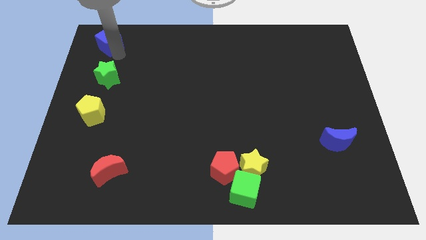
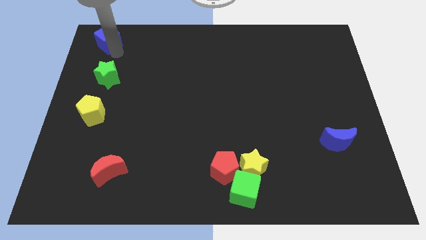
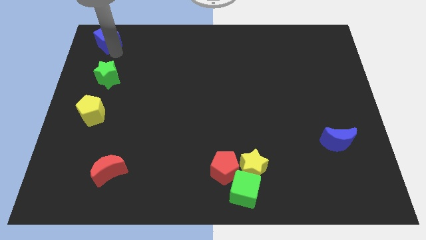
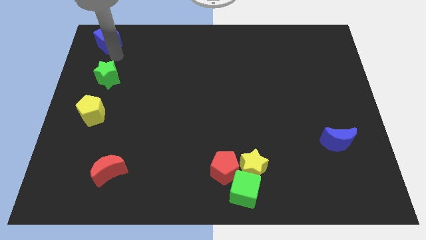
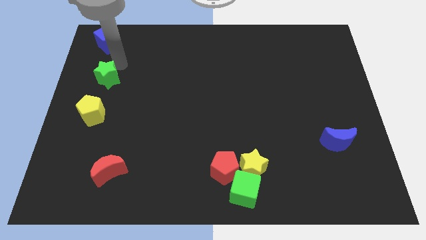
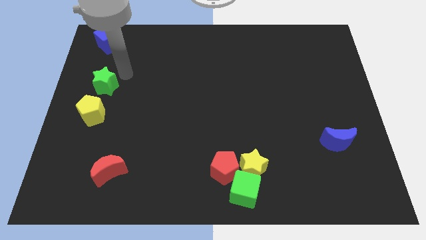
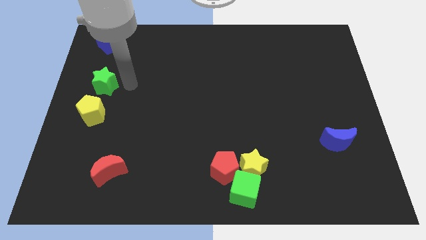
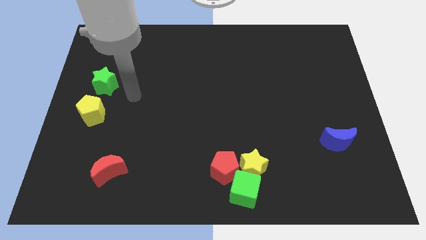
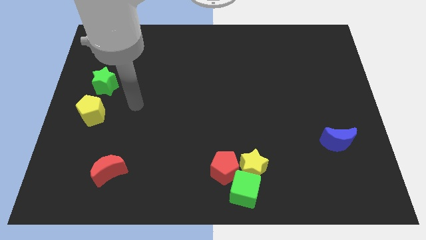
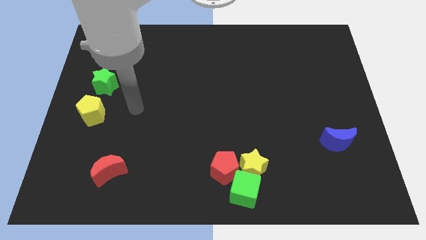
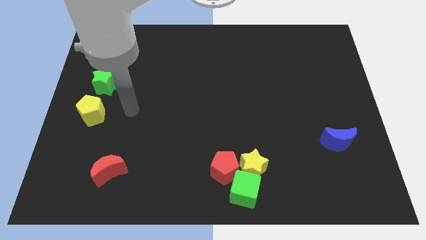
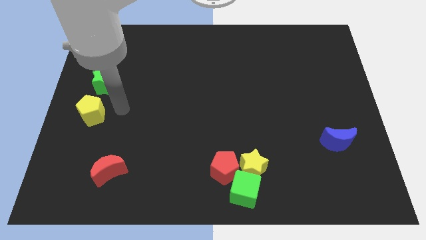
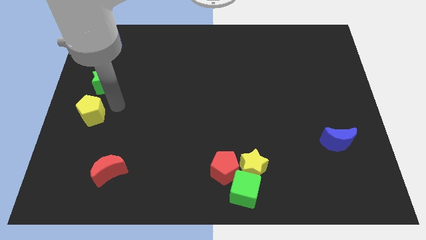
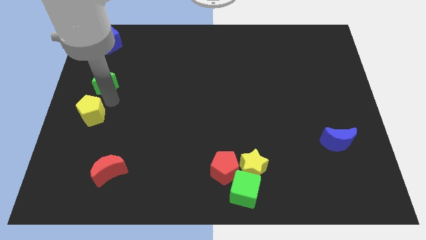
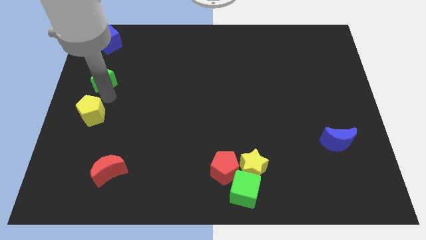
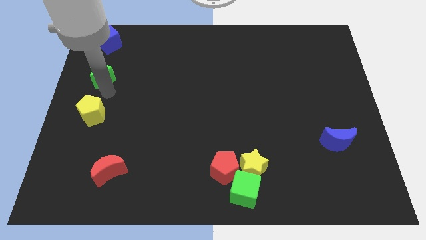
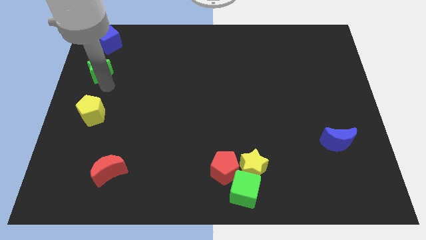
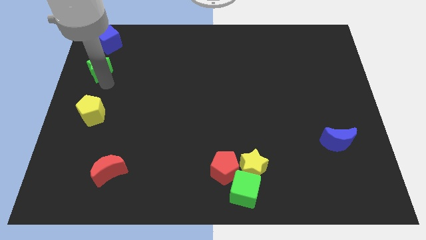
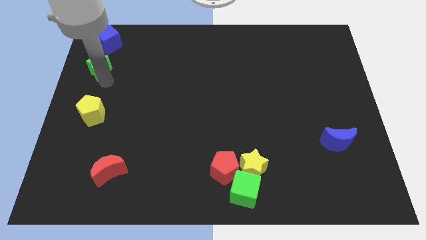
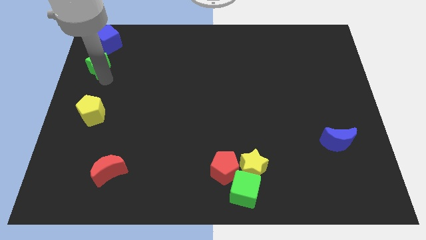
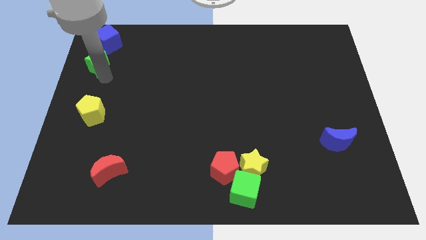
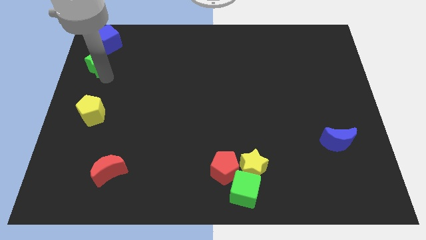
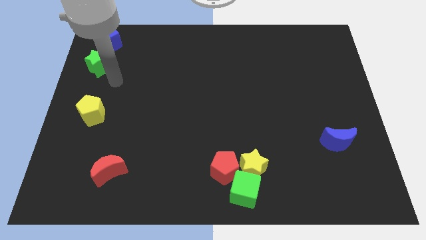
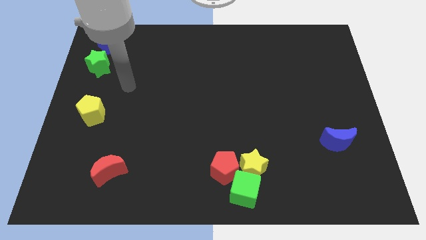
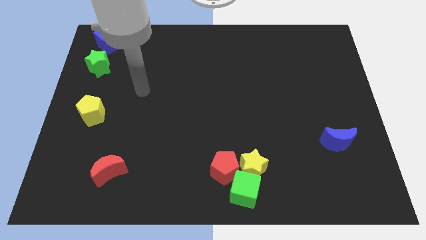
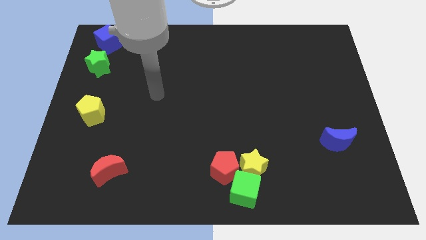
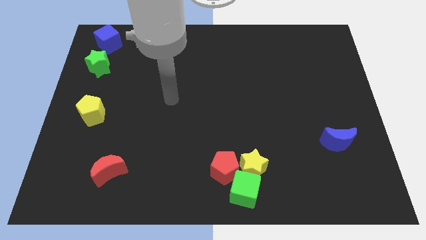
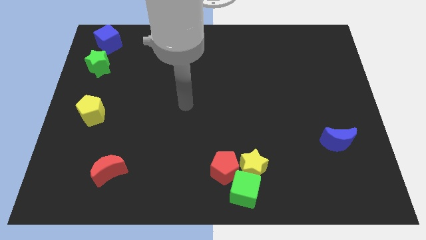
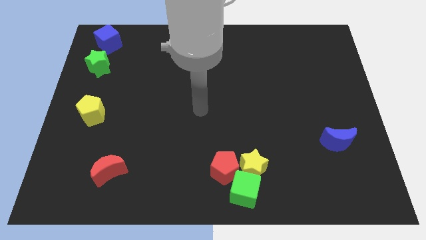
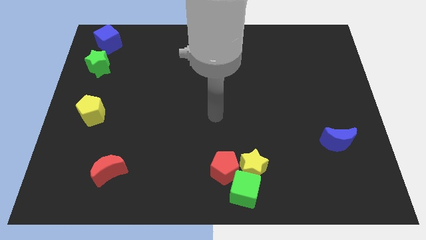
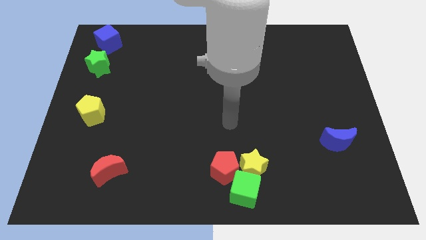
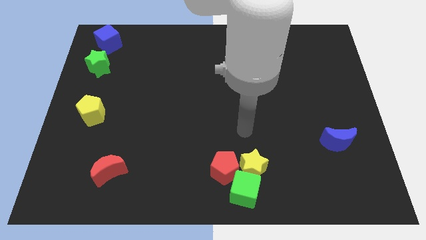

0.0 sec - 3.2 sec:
push the green star upwards to the blue cube

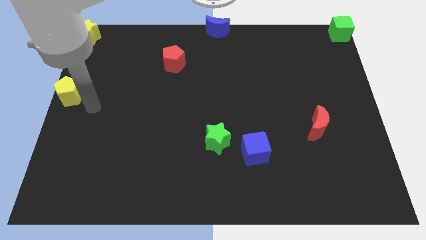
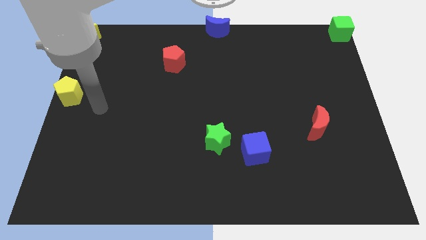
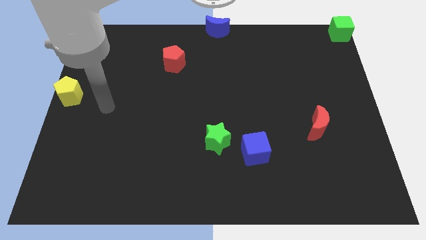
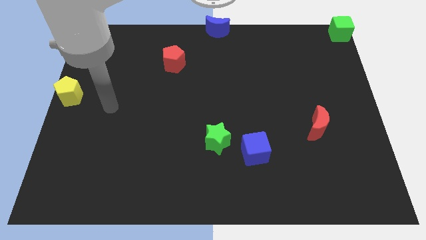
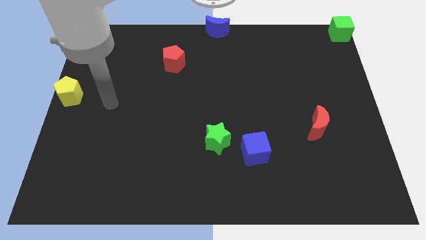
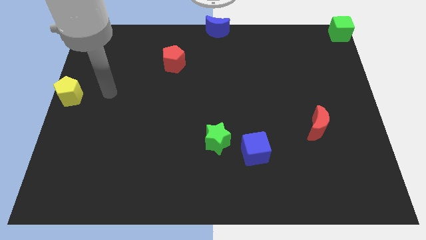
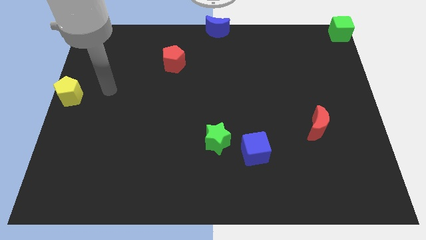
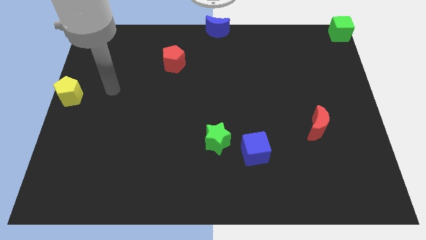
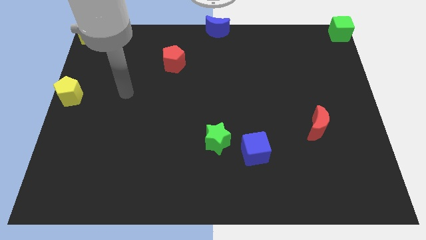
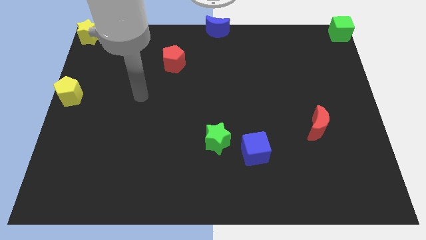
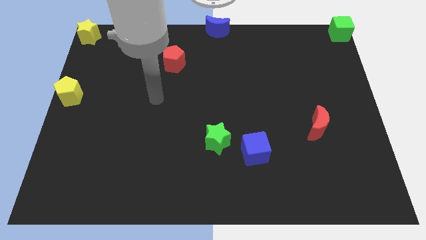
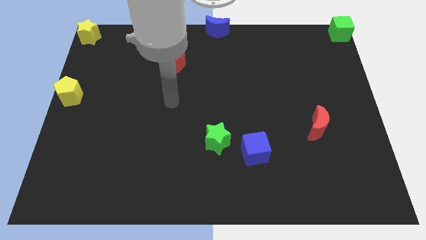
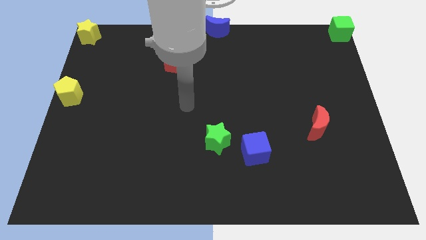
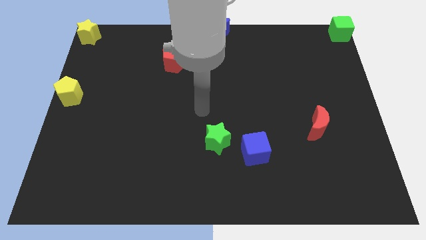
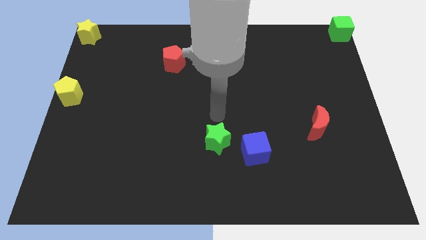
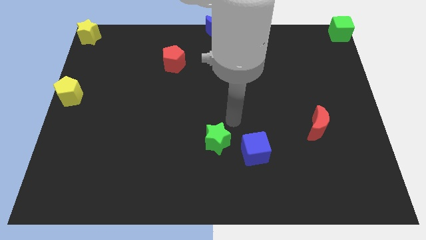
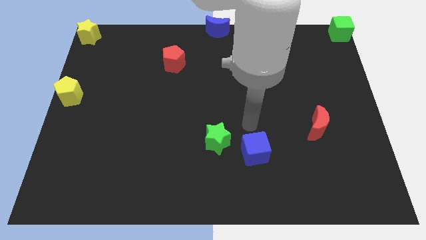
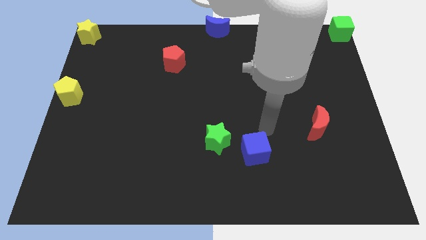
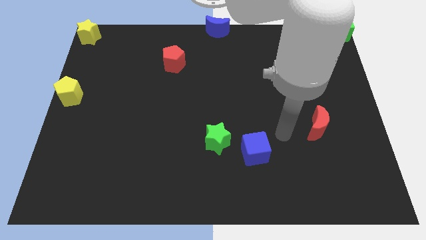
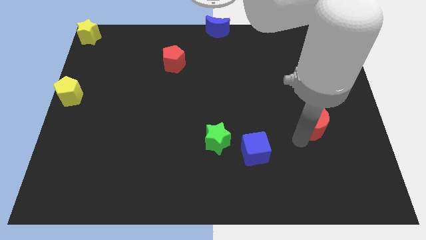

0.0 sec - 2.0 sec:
move away from the yellow pentagon

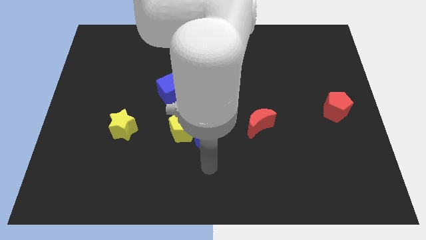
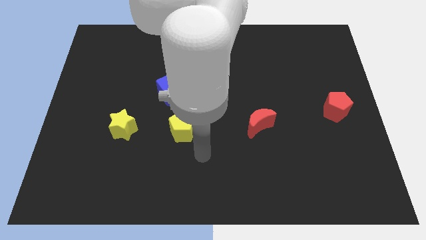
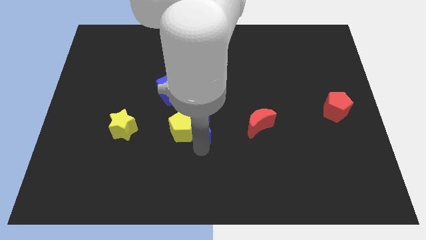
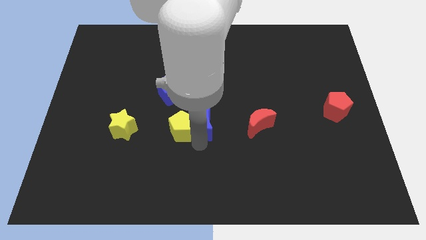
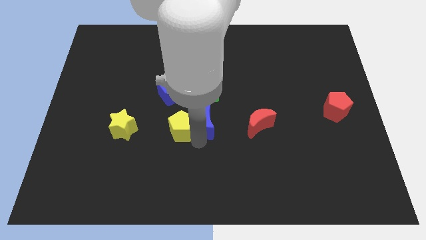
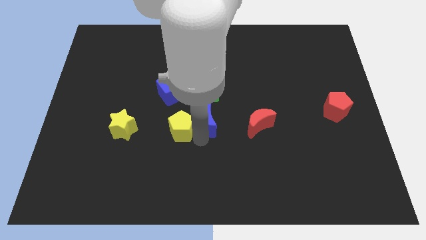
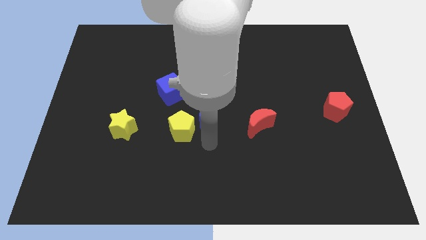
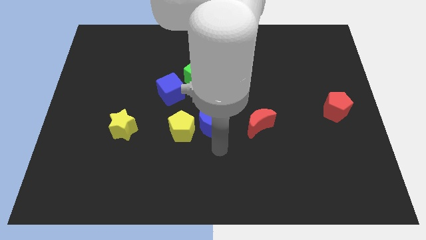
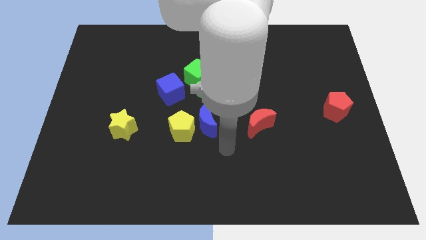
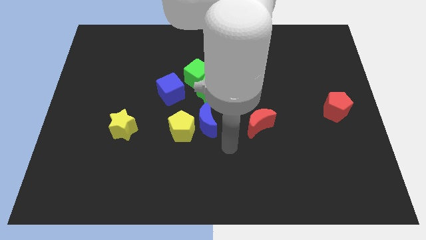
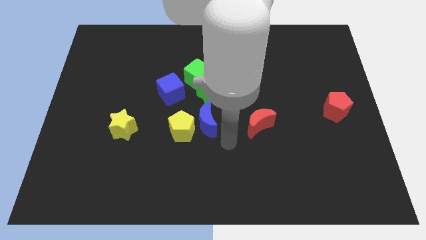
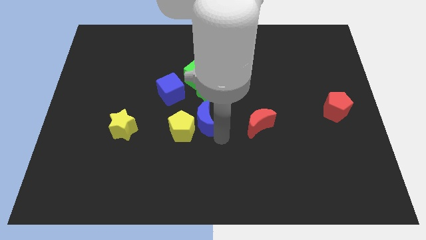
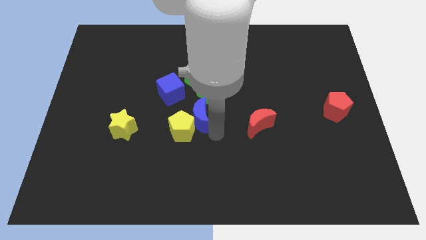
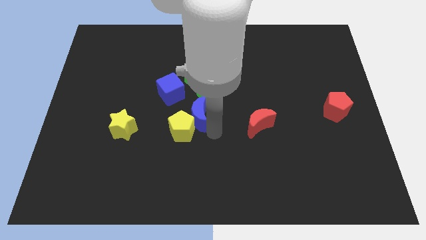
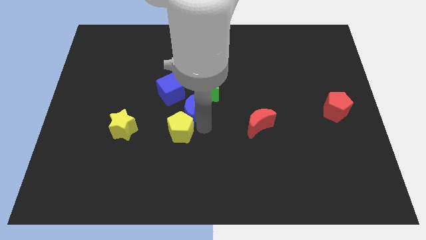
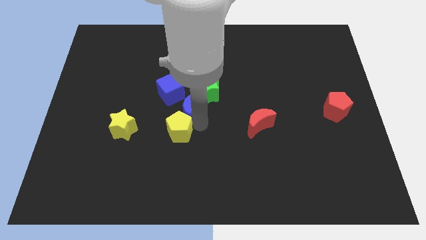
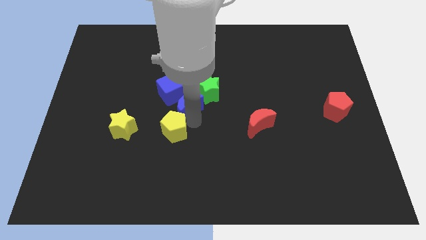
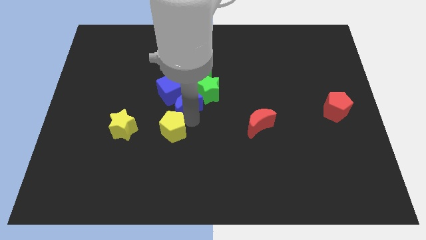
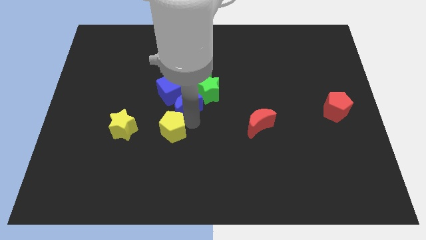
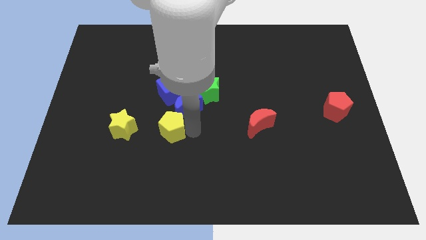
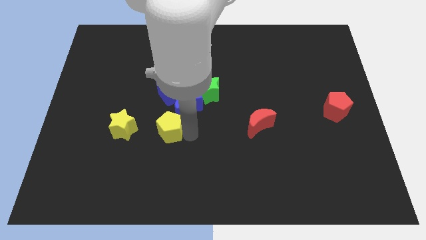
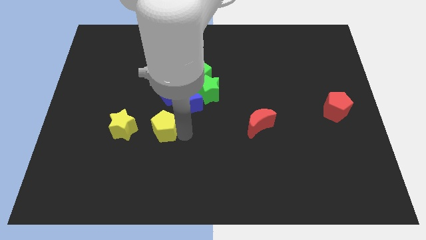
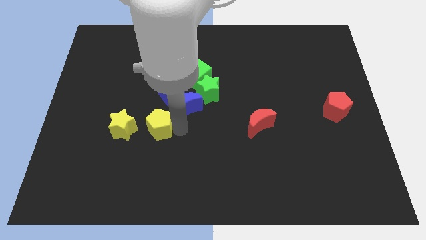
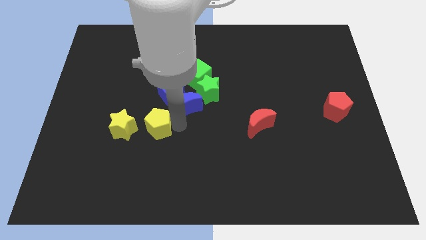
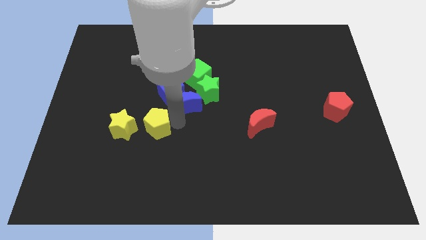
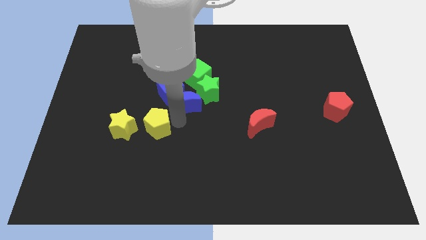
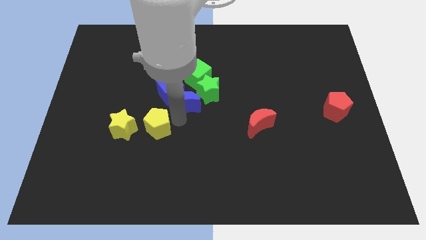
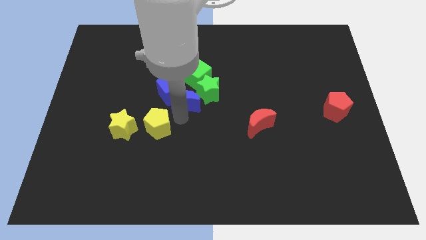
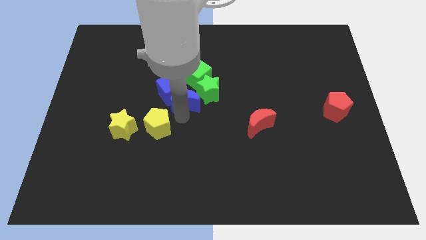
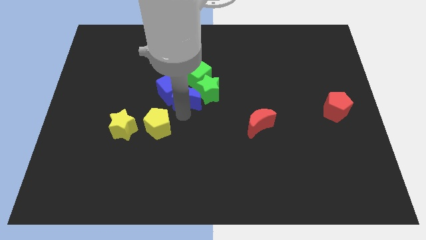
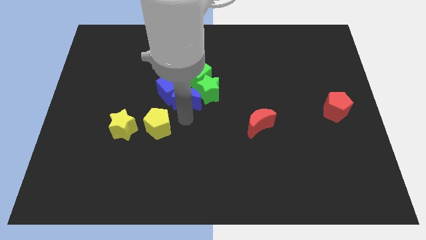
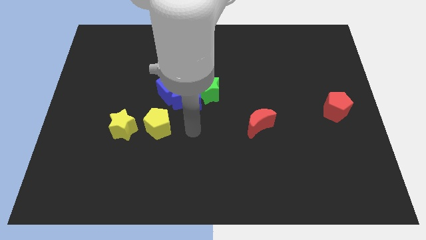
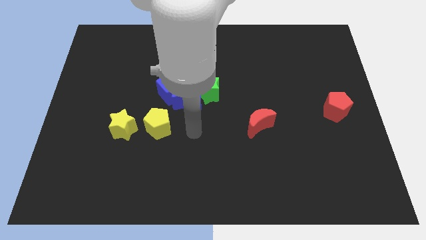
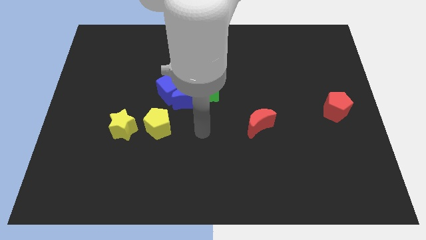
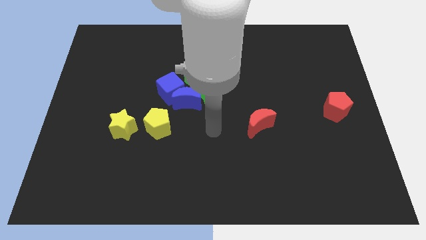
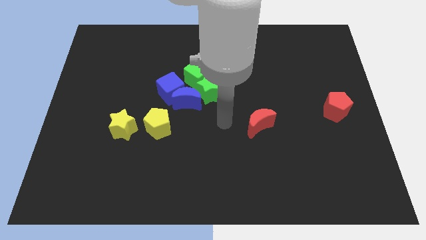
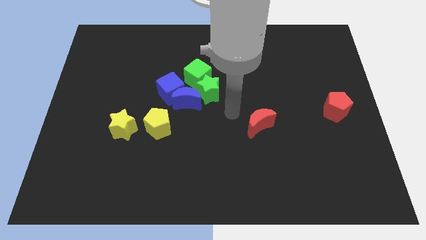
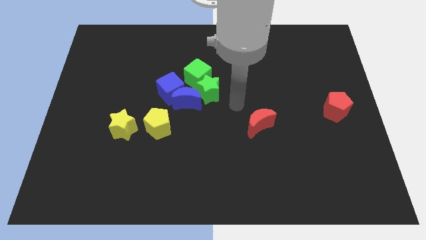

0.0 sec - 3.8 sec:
move the blue moon parallel left to the green star

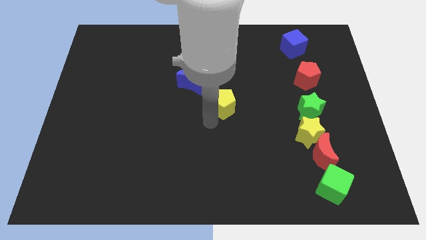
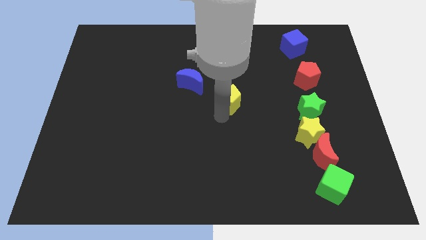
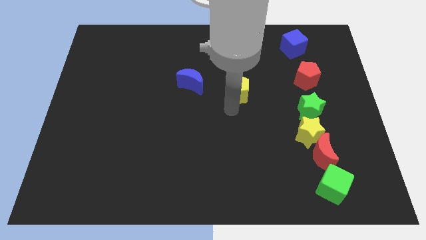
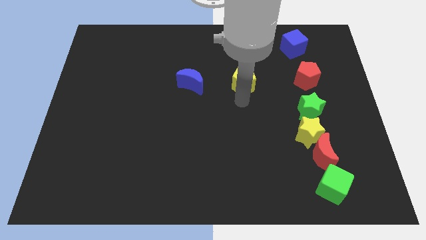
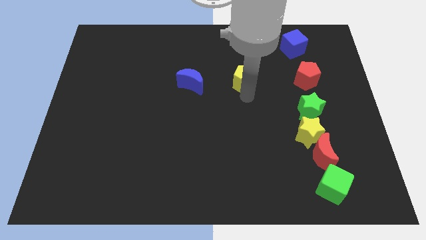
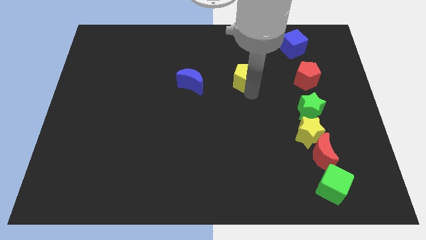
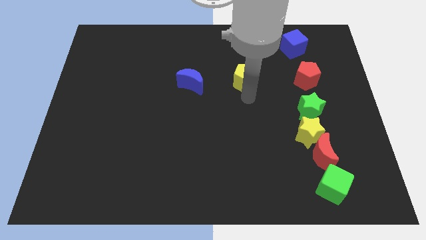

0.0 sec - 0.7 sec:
move the yellow pentagon upwards
